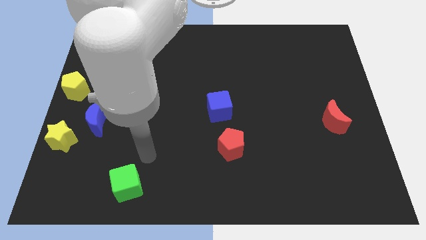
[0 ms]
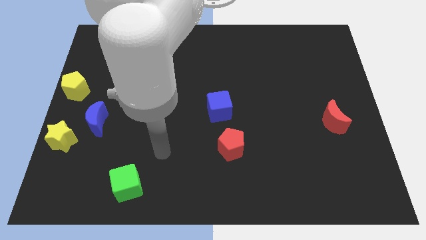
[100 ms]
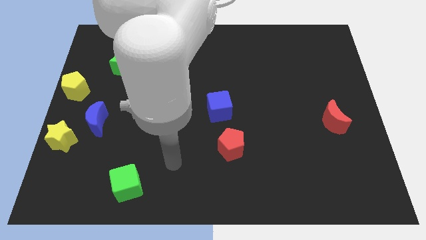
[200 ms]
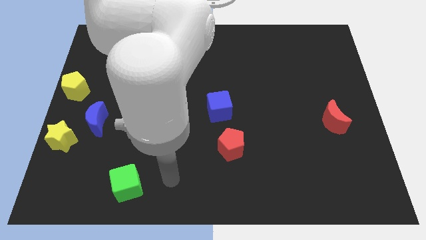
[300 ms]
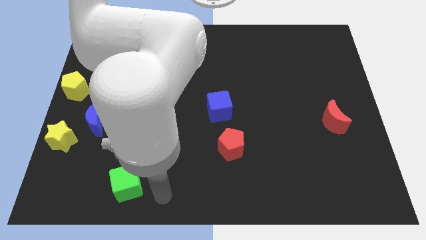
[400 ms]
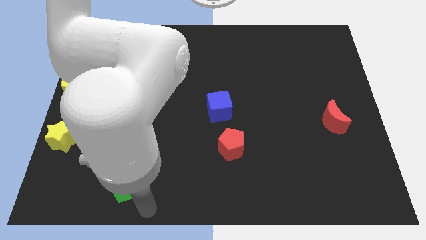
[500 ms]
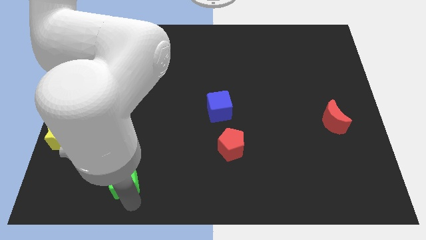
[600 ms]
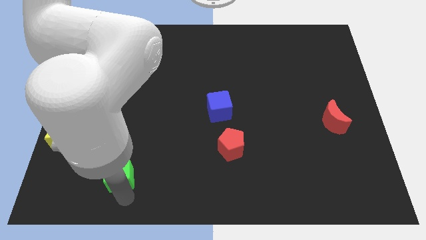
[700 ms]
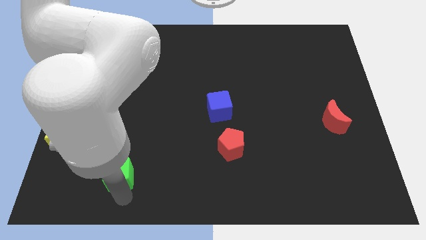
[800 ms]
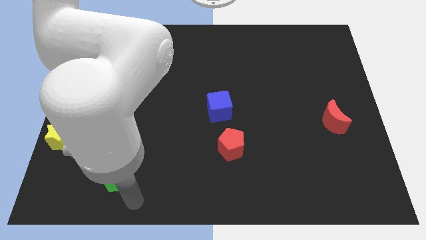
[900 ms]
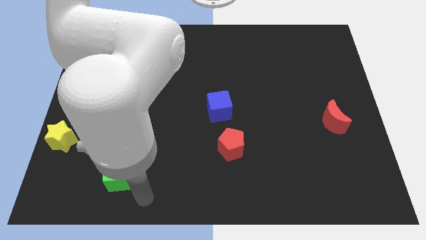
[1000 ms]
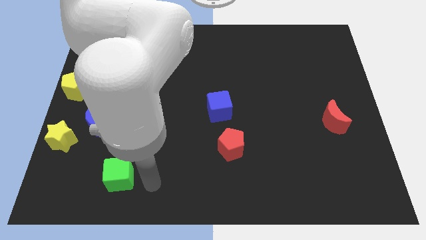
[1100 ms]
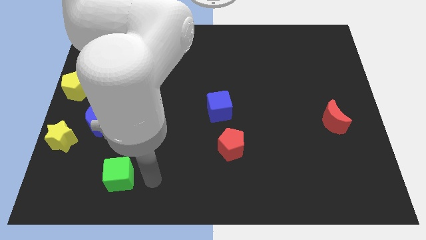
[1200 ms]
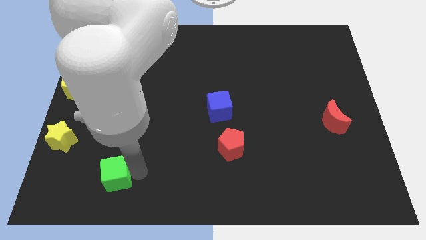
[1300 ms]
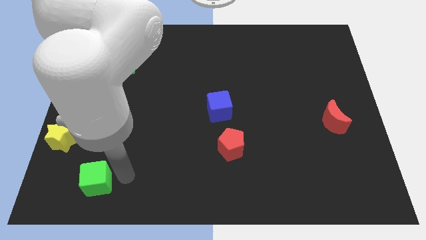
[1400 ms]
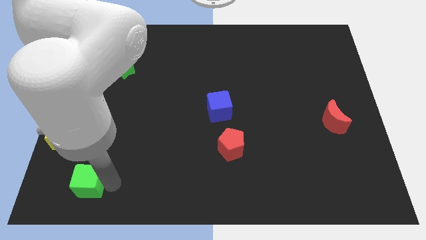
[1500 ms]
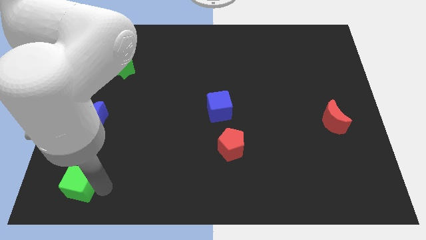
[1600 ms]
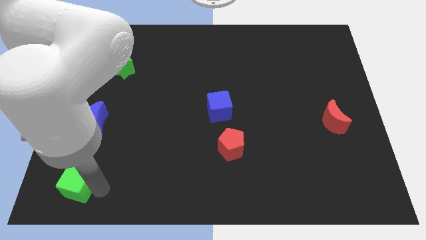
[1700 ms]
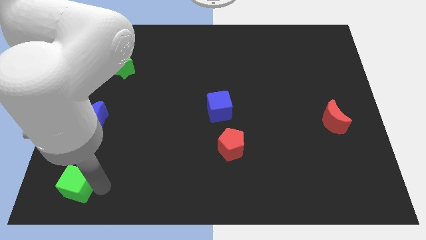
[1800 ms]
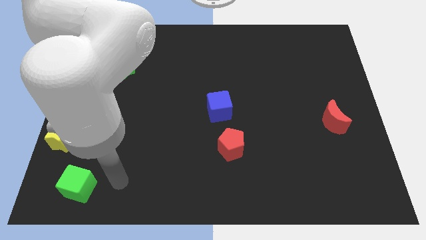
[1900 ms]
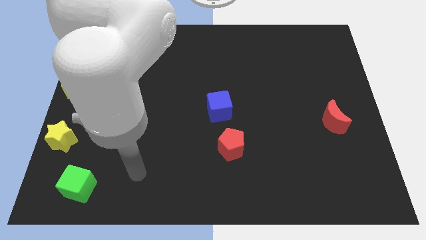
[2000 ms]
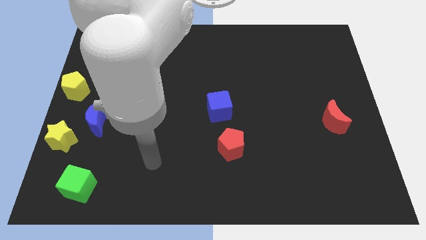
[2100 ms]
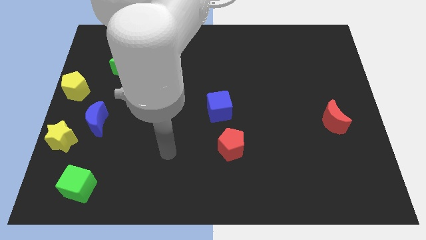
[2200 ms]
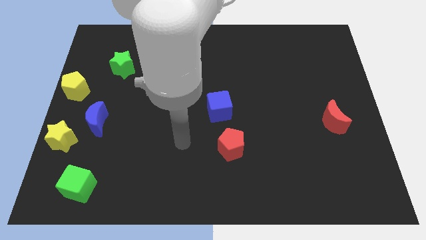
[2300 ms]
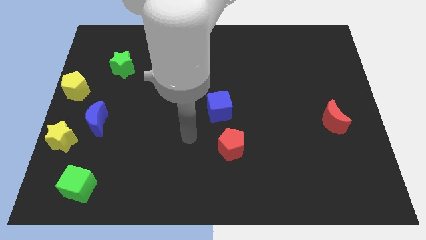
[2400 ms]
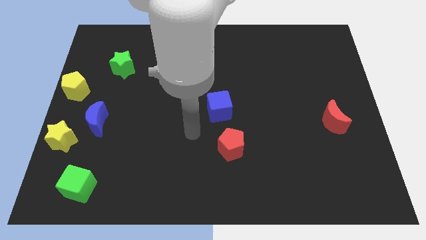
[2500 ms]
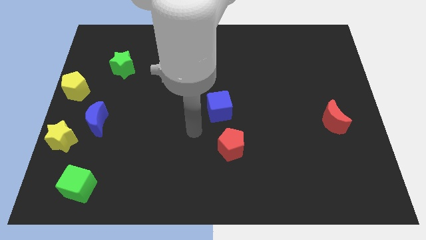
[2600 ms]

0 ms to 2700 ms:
slightly push the green cube to the bottom left of the board

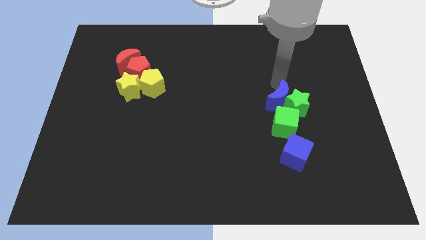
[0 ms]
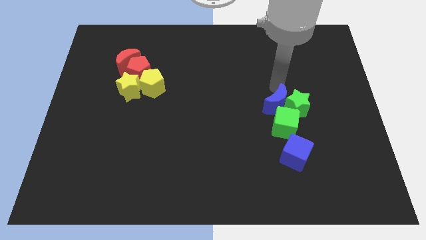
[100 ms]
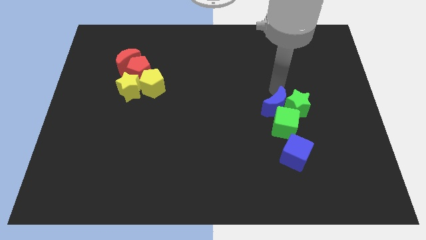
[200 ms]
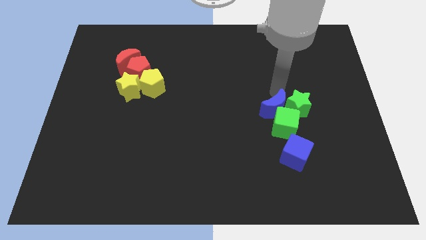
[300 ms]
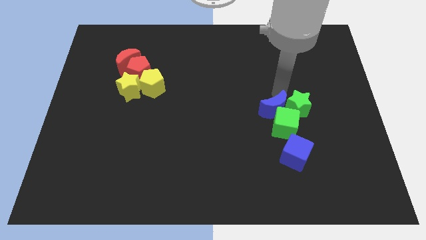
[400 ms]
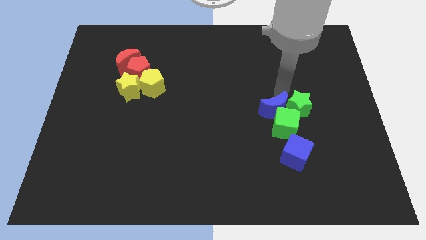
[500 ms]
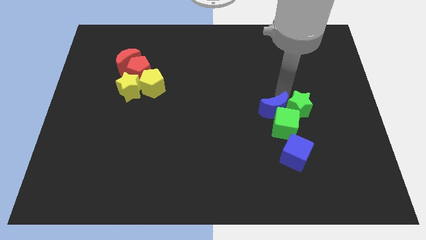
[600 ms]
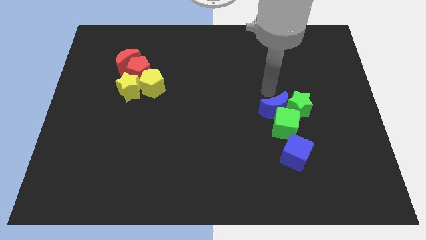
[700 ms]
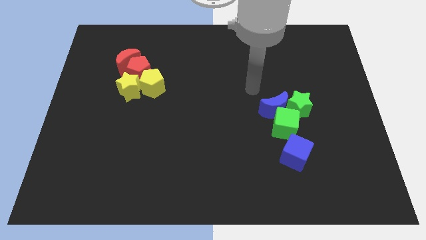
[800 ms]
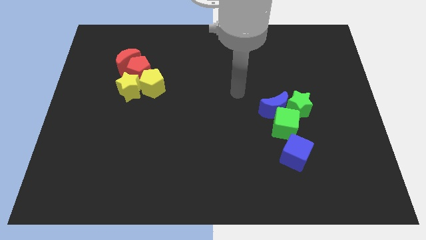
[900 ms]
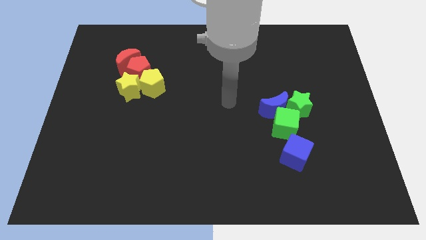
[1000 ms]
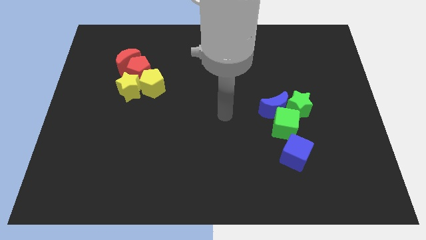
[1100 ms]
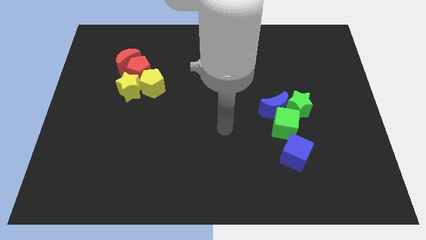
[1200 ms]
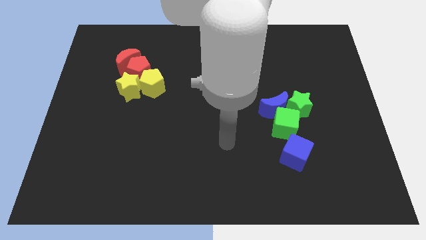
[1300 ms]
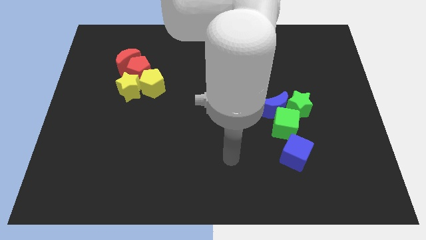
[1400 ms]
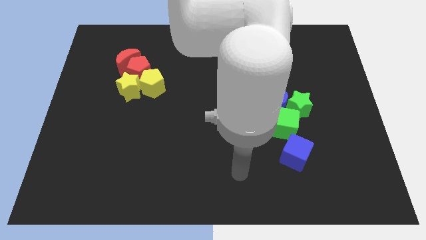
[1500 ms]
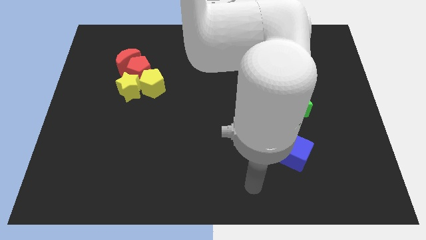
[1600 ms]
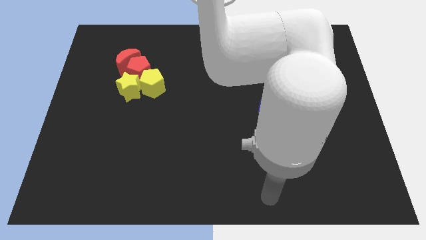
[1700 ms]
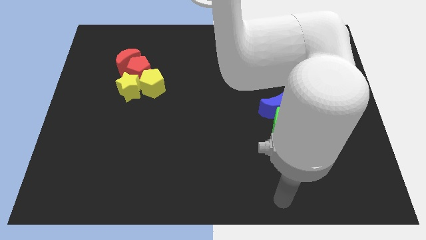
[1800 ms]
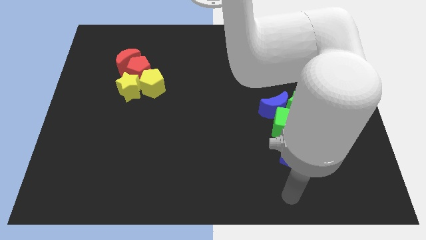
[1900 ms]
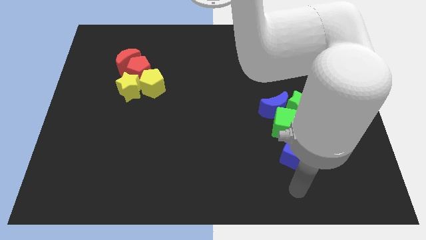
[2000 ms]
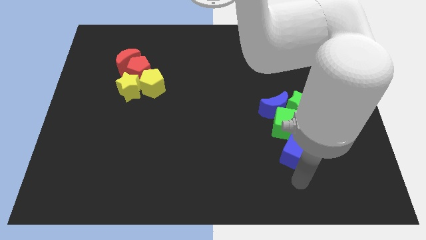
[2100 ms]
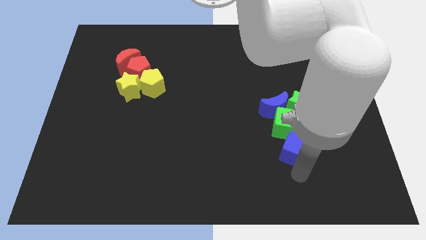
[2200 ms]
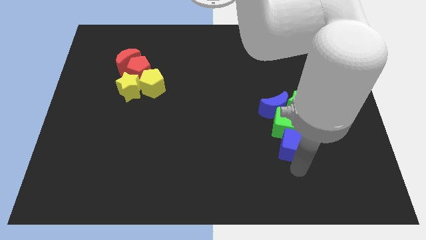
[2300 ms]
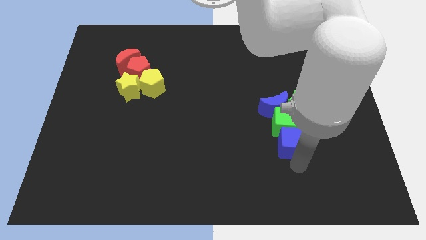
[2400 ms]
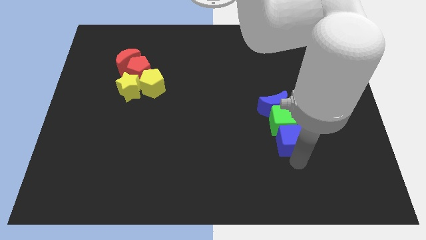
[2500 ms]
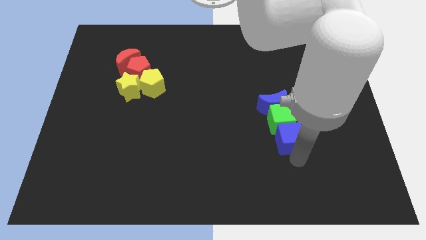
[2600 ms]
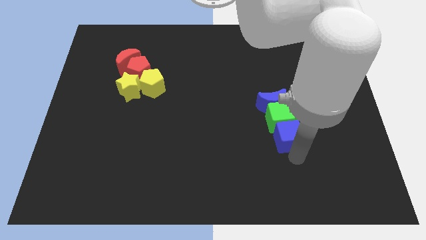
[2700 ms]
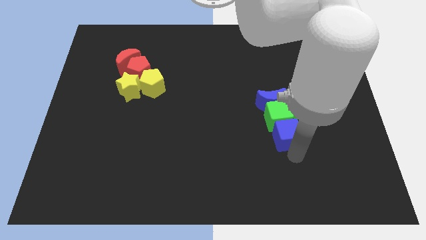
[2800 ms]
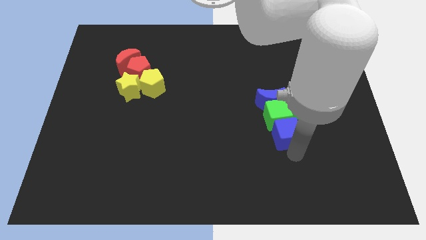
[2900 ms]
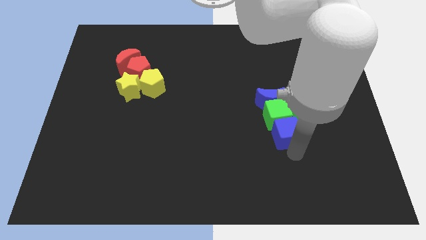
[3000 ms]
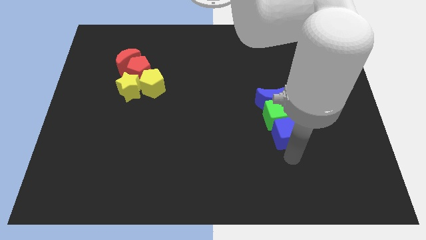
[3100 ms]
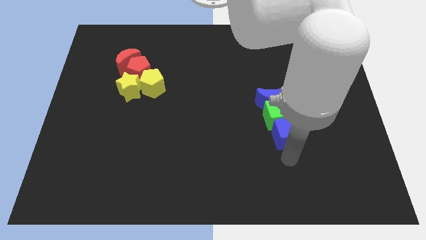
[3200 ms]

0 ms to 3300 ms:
push the blue cube into the green cube

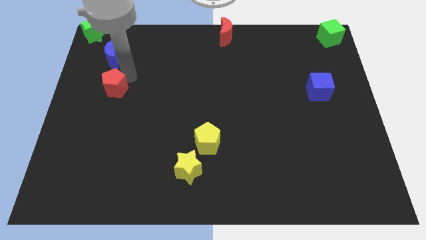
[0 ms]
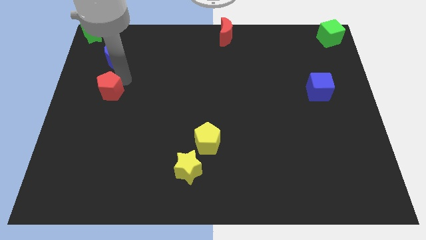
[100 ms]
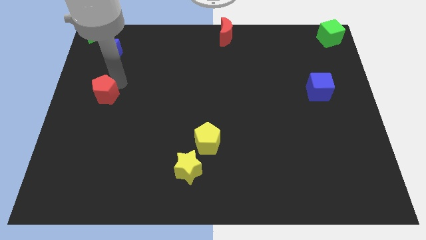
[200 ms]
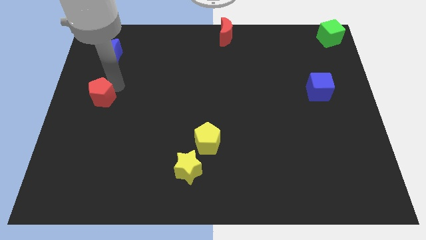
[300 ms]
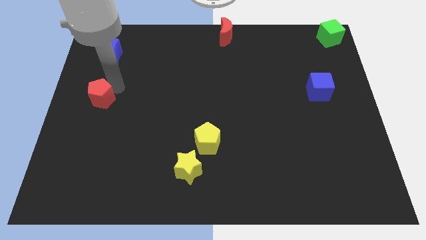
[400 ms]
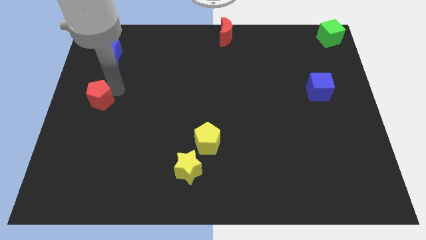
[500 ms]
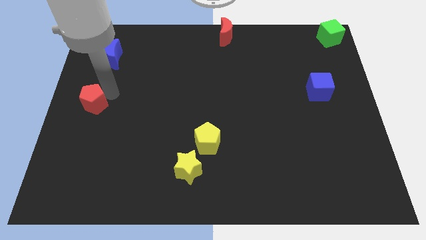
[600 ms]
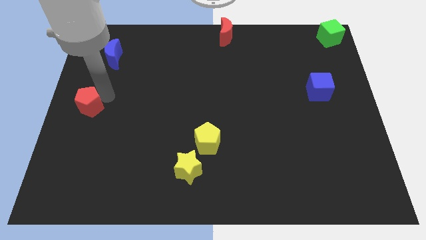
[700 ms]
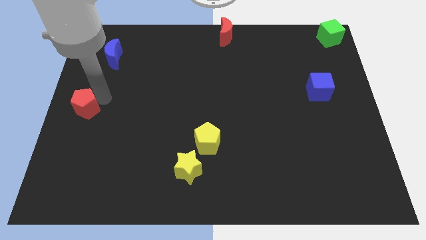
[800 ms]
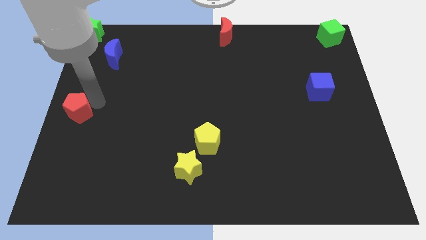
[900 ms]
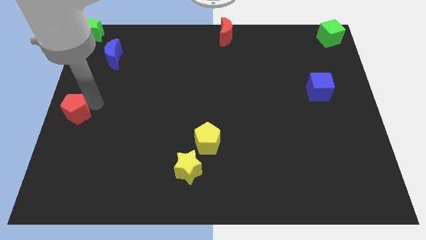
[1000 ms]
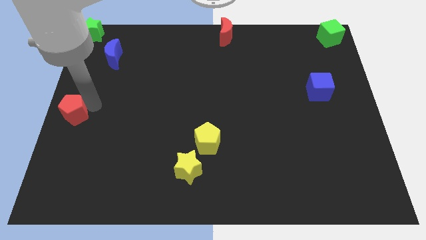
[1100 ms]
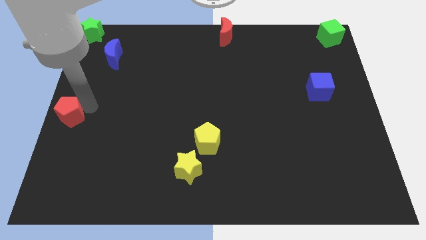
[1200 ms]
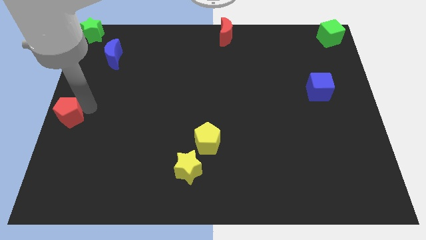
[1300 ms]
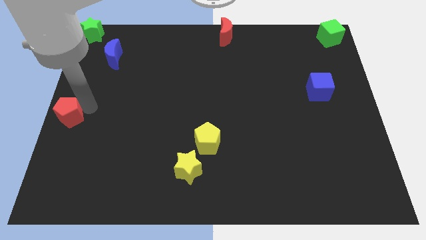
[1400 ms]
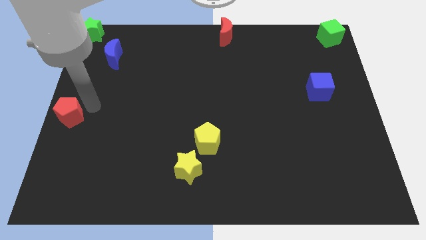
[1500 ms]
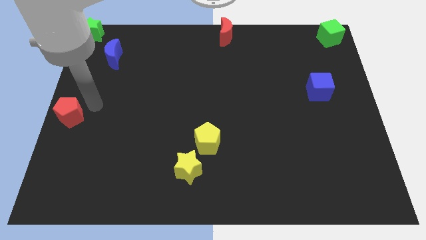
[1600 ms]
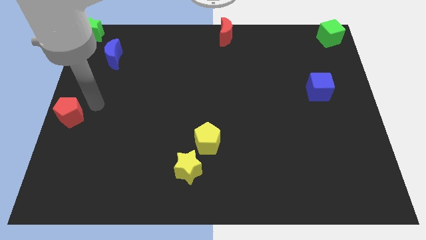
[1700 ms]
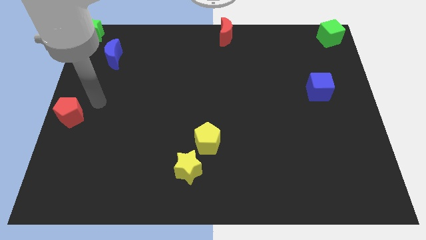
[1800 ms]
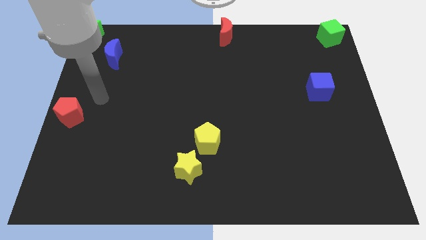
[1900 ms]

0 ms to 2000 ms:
push the red pentagon to left center

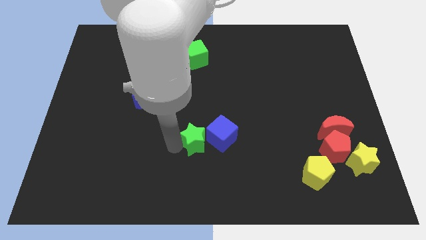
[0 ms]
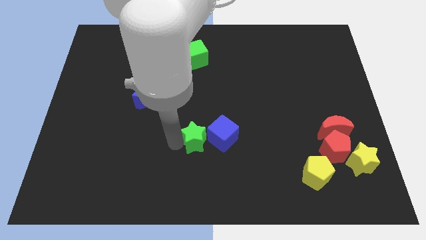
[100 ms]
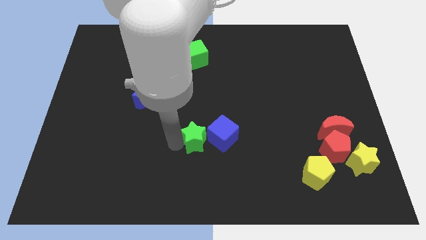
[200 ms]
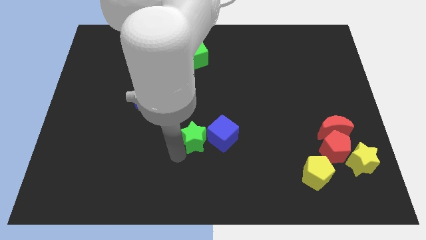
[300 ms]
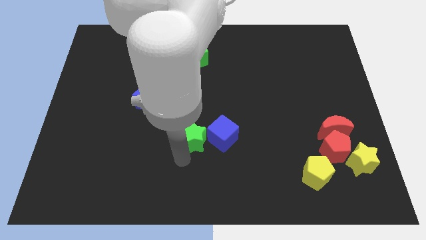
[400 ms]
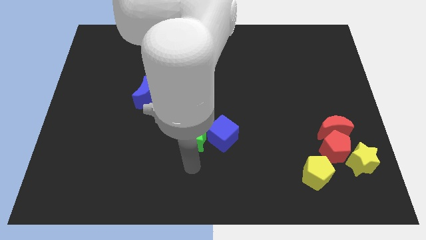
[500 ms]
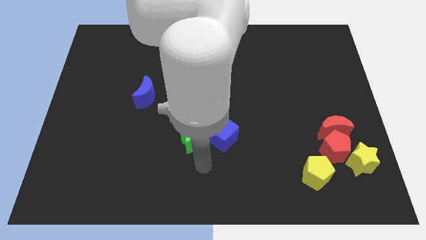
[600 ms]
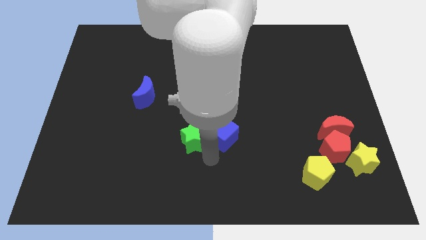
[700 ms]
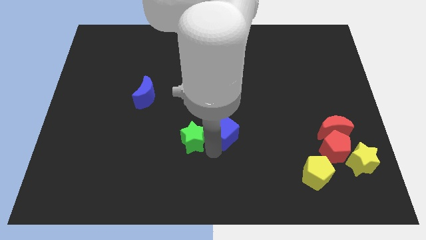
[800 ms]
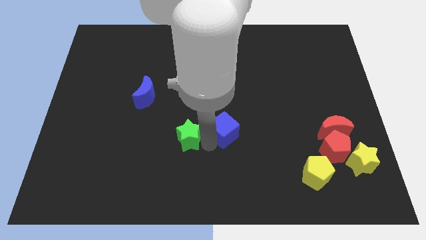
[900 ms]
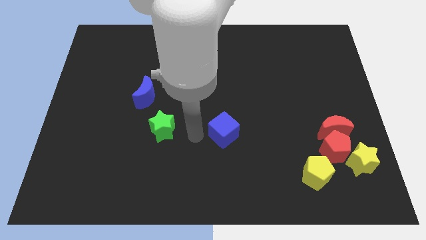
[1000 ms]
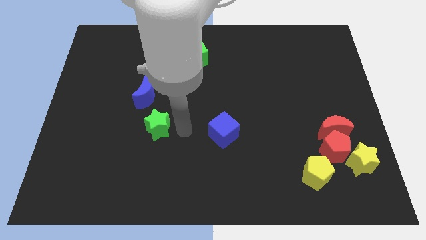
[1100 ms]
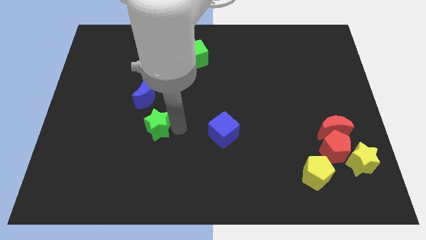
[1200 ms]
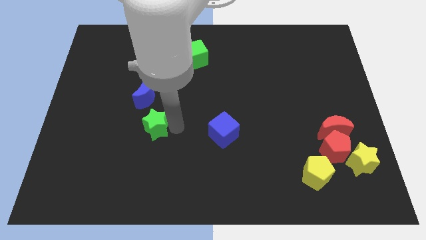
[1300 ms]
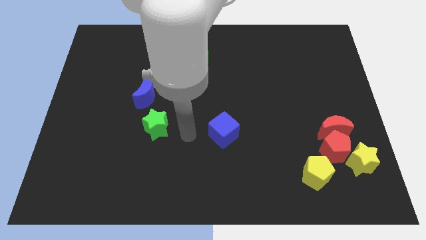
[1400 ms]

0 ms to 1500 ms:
move the green star to the bottom of the blue crescent
